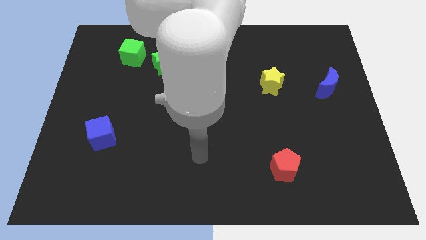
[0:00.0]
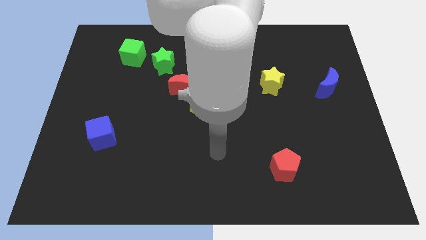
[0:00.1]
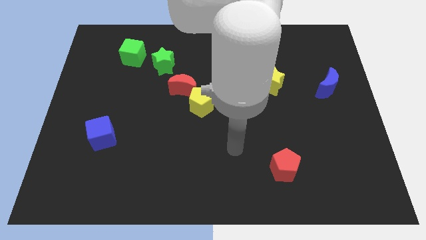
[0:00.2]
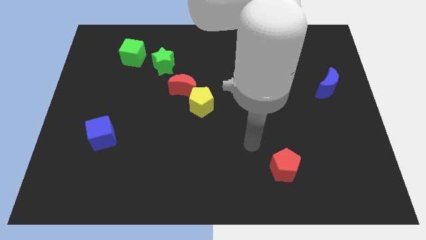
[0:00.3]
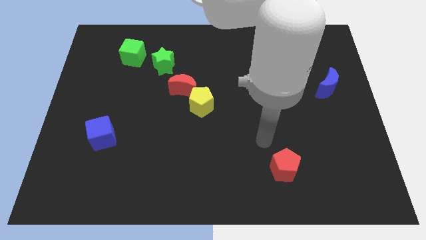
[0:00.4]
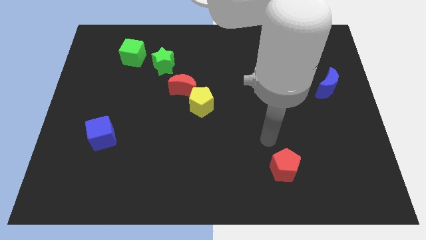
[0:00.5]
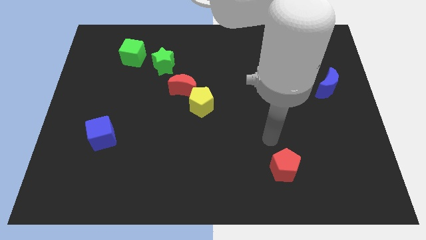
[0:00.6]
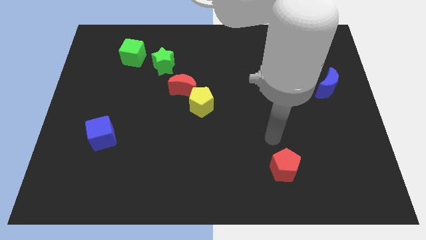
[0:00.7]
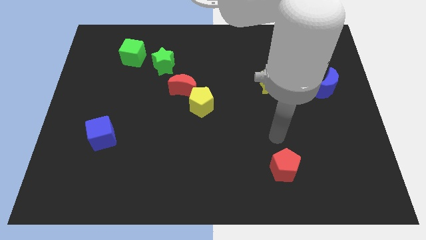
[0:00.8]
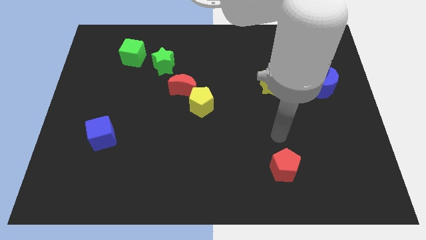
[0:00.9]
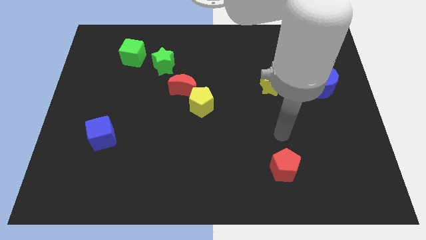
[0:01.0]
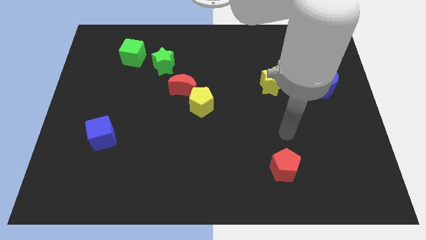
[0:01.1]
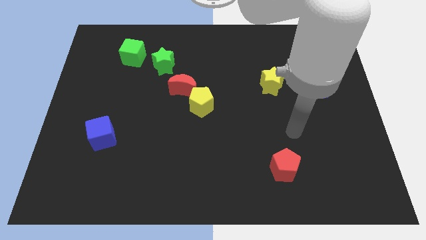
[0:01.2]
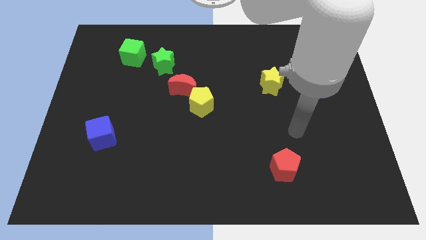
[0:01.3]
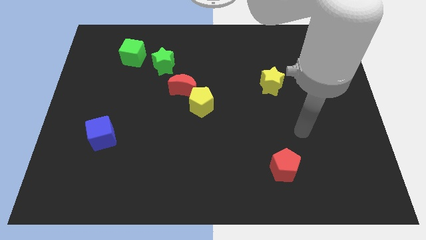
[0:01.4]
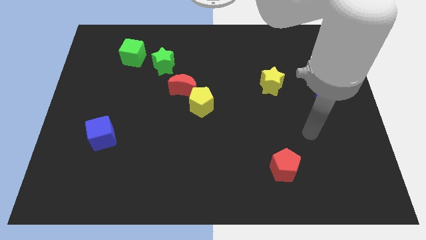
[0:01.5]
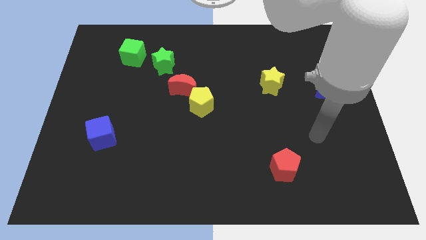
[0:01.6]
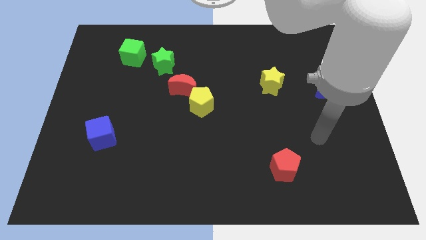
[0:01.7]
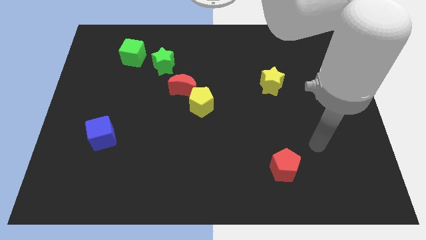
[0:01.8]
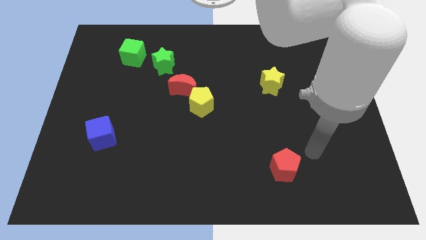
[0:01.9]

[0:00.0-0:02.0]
move the arm towards the red pentagon

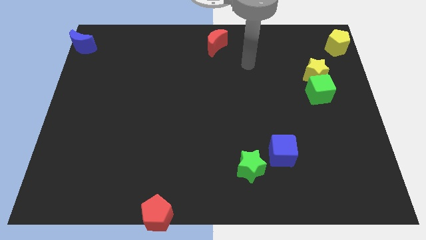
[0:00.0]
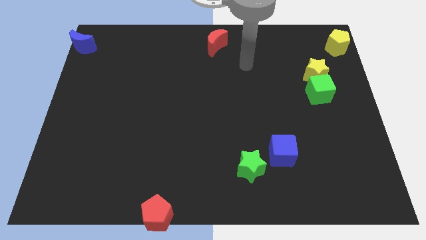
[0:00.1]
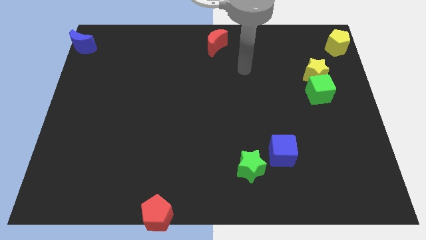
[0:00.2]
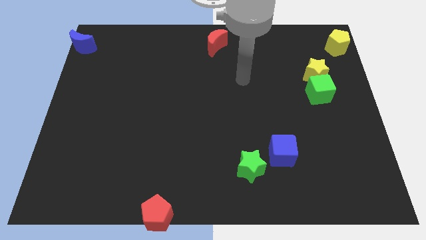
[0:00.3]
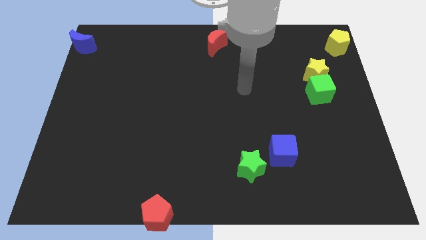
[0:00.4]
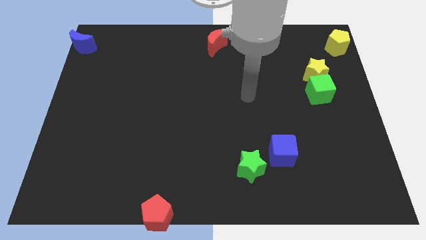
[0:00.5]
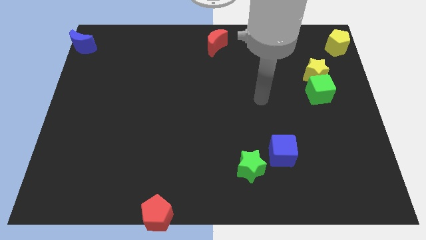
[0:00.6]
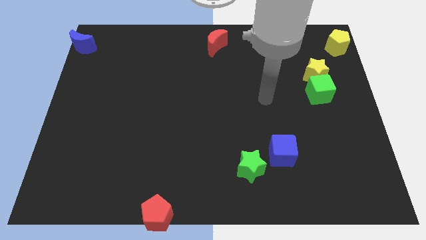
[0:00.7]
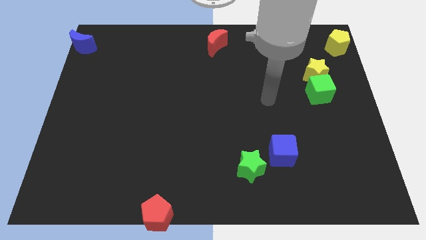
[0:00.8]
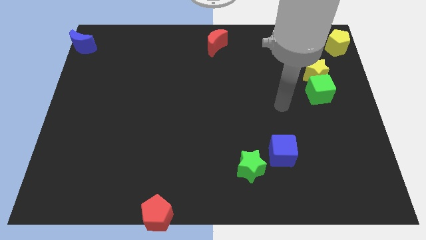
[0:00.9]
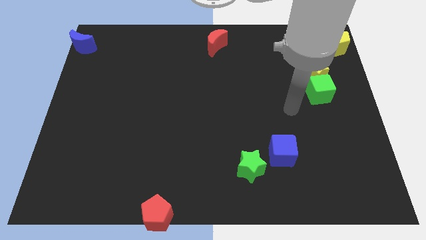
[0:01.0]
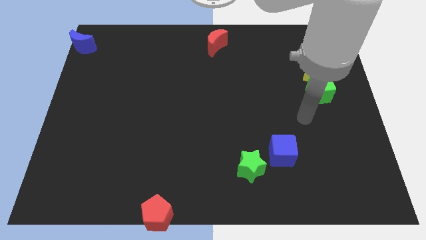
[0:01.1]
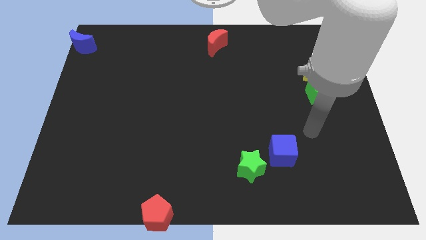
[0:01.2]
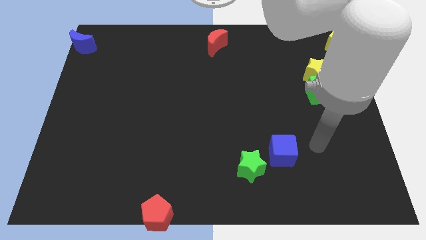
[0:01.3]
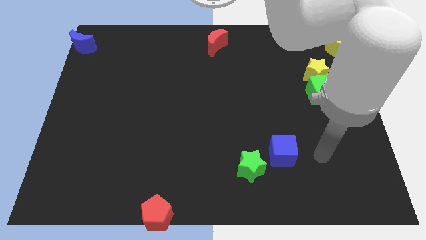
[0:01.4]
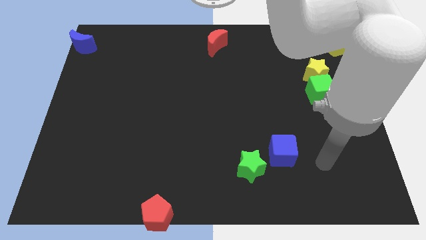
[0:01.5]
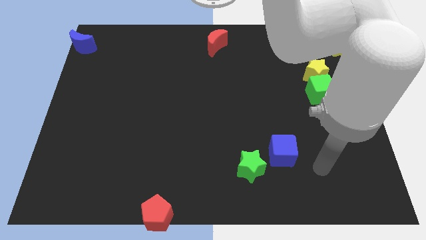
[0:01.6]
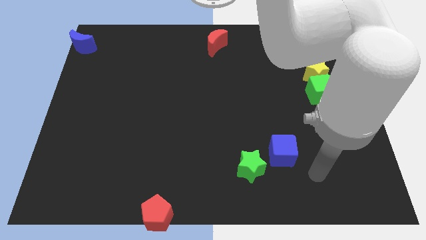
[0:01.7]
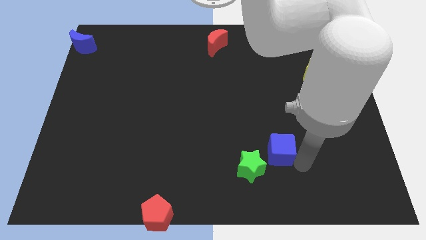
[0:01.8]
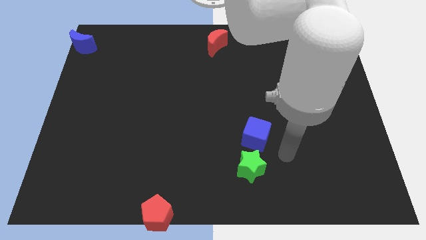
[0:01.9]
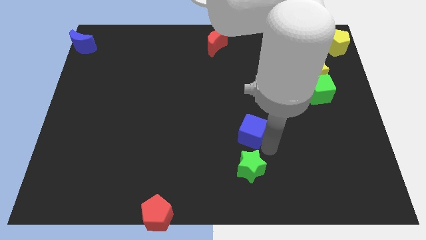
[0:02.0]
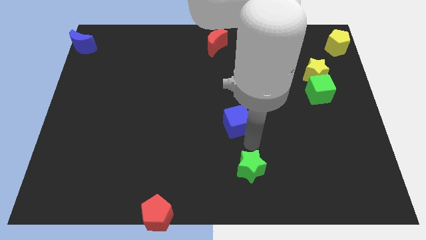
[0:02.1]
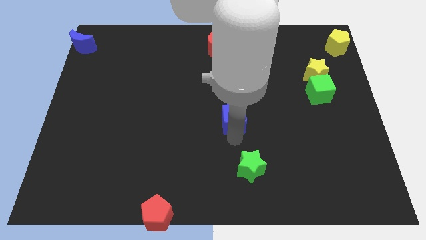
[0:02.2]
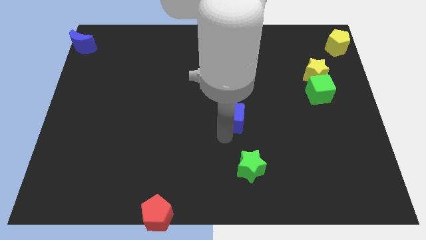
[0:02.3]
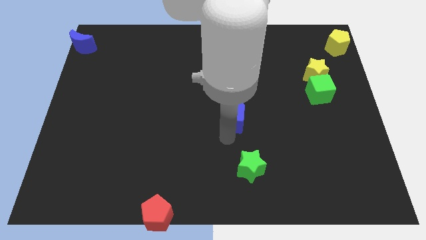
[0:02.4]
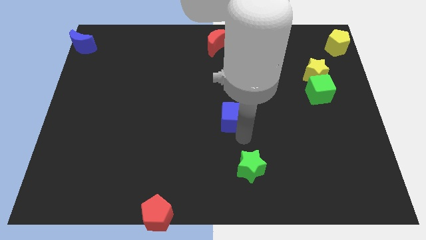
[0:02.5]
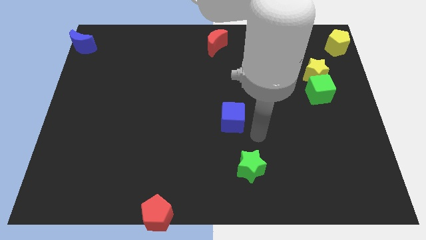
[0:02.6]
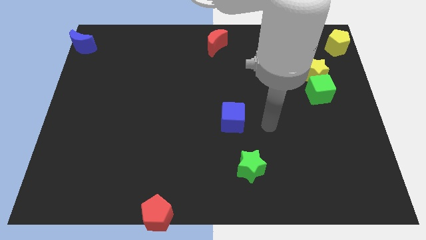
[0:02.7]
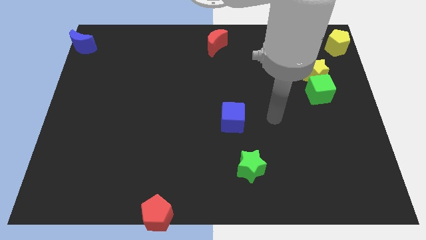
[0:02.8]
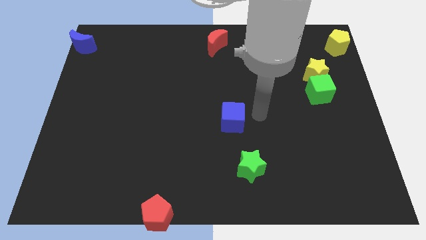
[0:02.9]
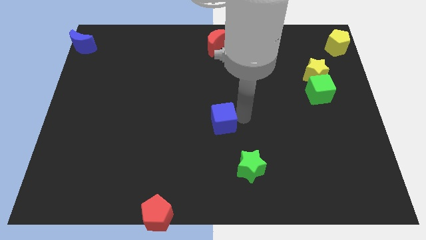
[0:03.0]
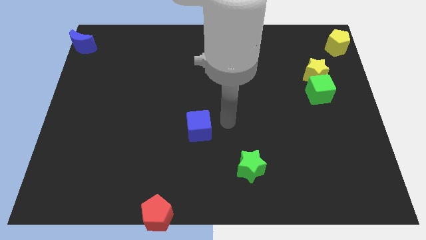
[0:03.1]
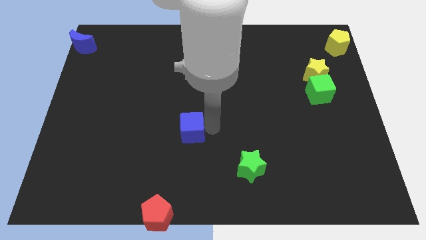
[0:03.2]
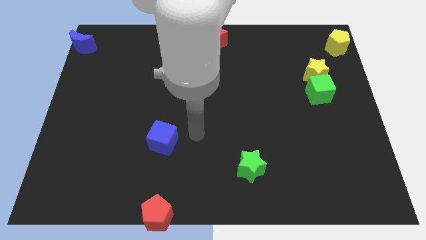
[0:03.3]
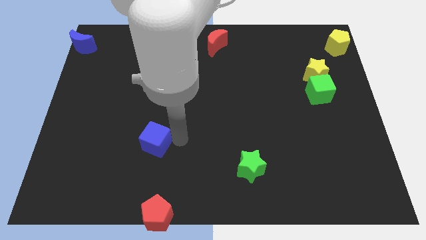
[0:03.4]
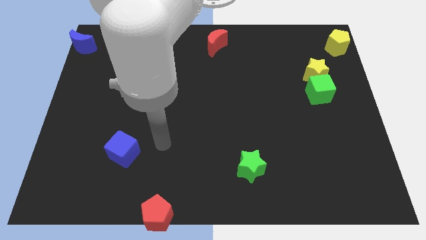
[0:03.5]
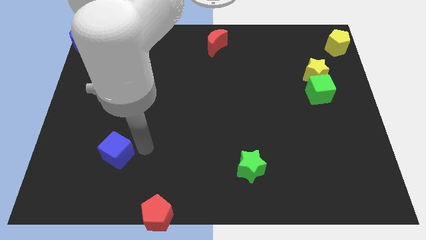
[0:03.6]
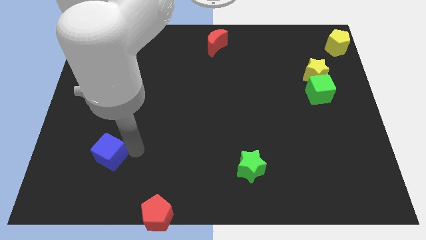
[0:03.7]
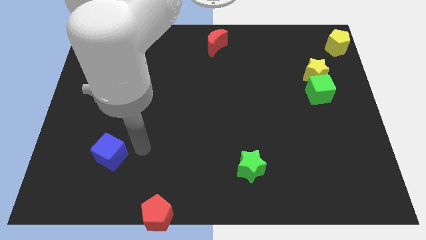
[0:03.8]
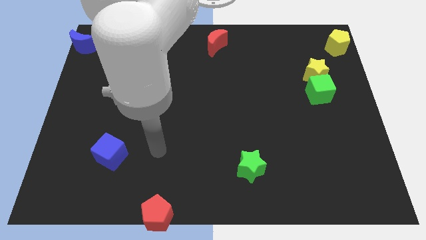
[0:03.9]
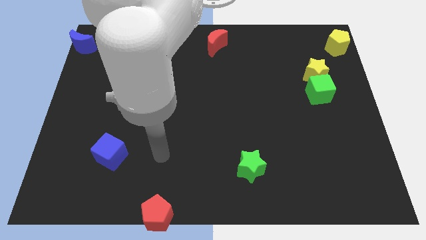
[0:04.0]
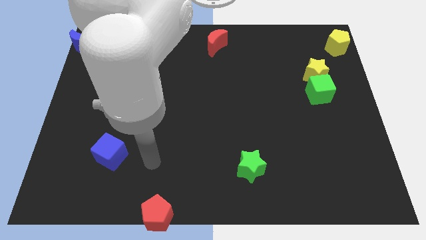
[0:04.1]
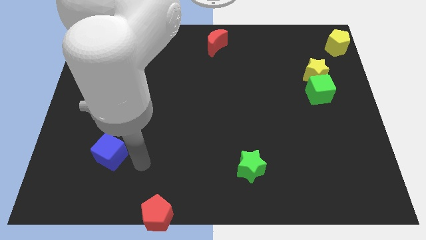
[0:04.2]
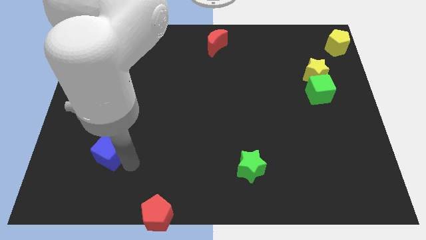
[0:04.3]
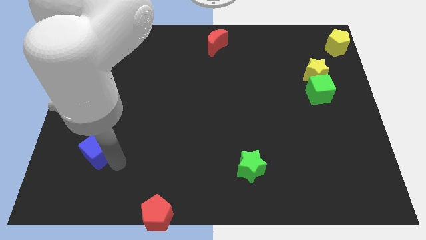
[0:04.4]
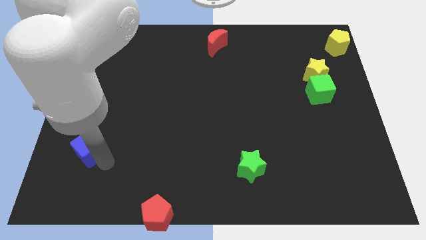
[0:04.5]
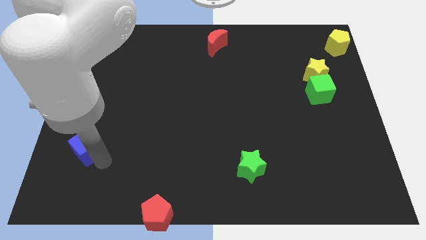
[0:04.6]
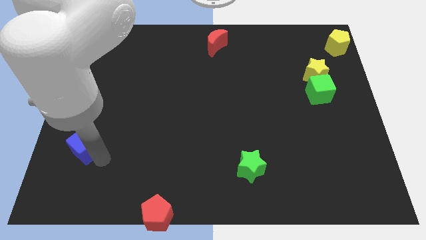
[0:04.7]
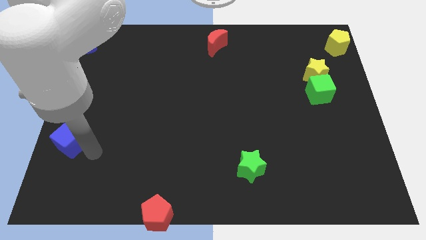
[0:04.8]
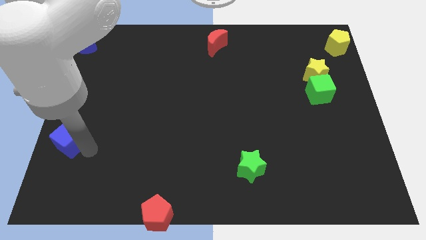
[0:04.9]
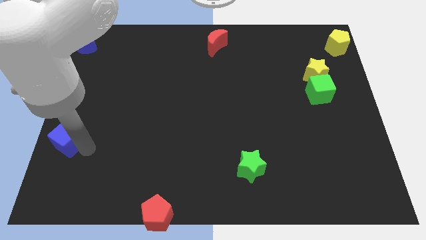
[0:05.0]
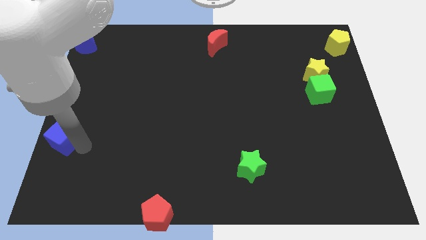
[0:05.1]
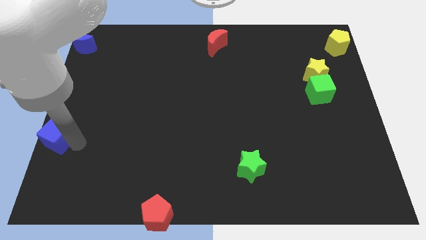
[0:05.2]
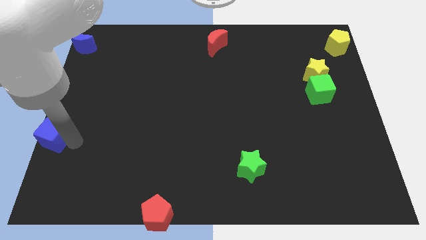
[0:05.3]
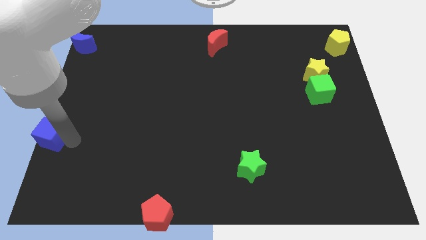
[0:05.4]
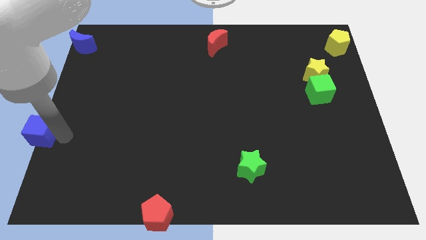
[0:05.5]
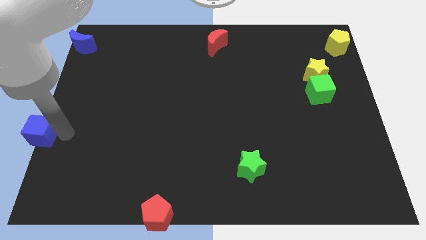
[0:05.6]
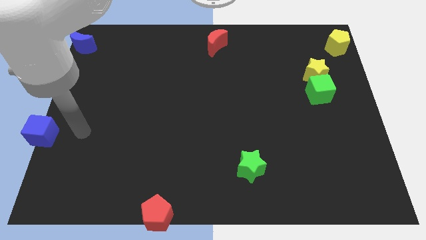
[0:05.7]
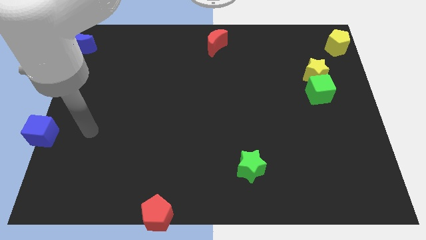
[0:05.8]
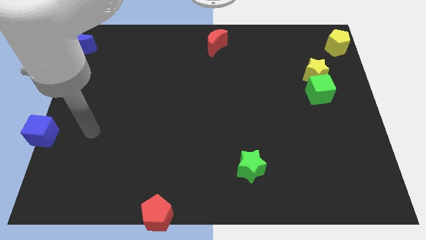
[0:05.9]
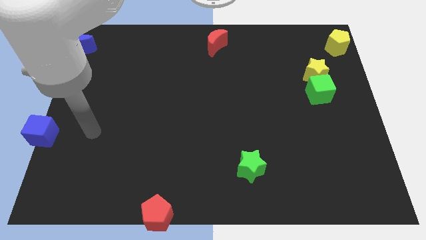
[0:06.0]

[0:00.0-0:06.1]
move the blue cube to the center left side of the board

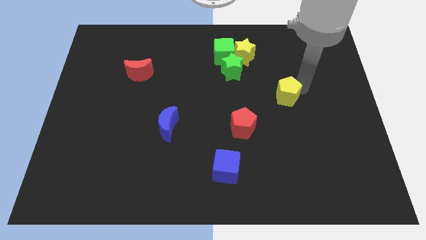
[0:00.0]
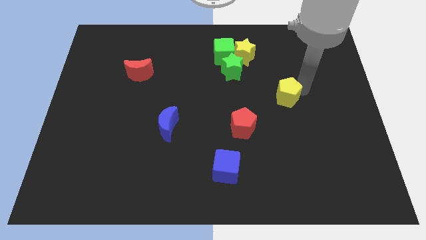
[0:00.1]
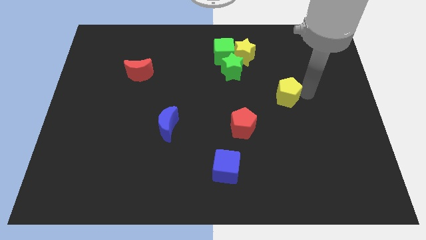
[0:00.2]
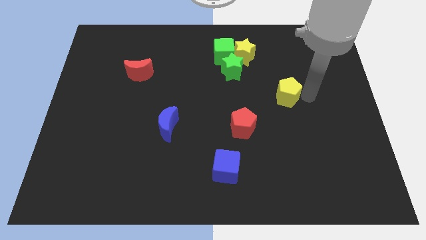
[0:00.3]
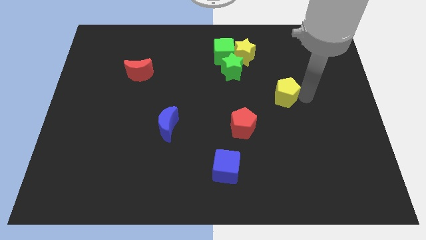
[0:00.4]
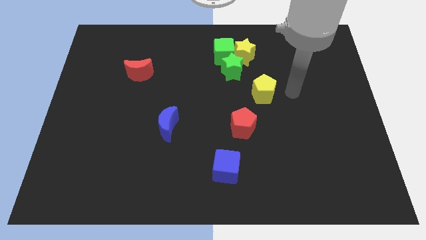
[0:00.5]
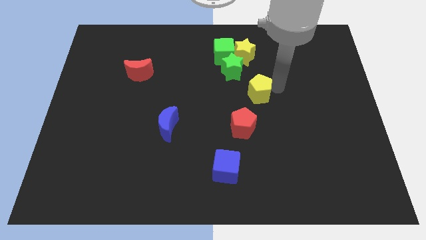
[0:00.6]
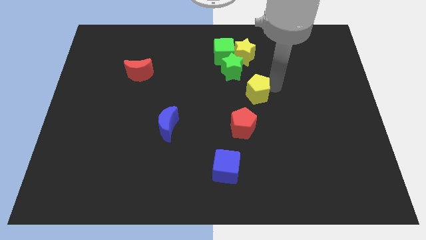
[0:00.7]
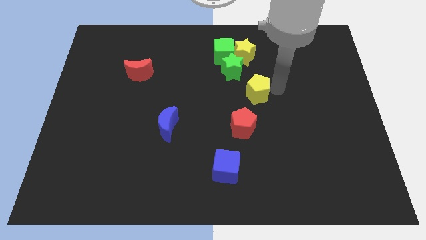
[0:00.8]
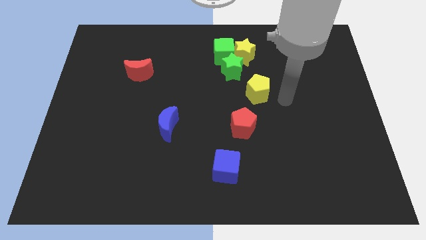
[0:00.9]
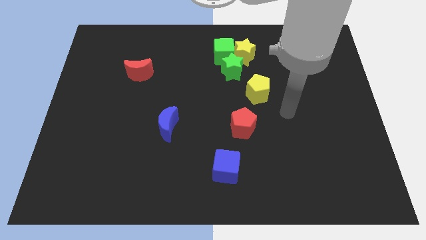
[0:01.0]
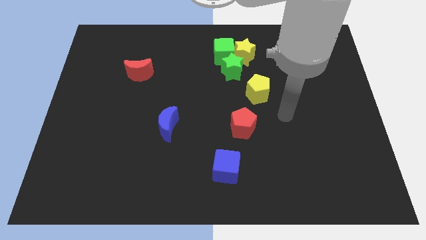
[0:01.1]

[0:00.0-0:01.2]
place the yellow pentagon vertically below the yellow star
